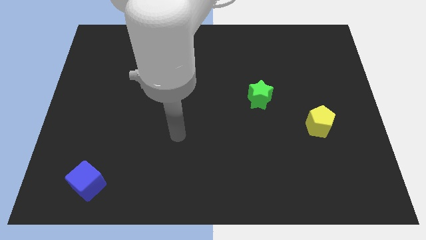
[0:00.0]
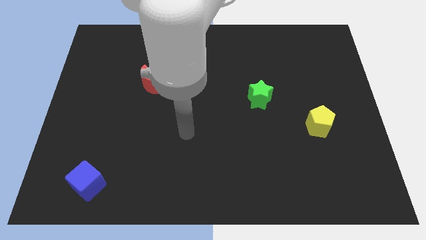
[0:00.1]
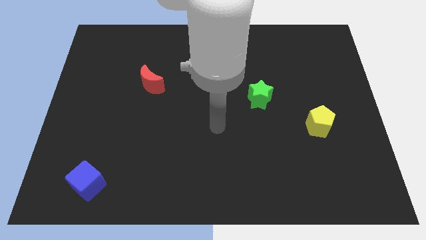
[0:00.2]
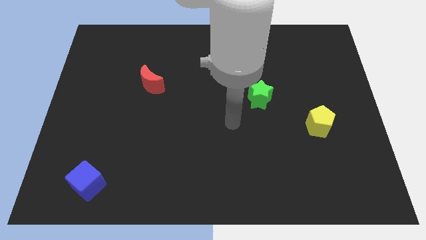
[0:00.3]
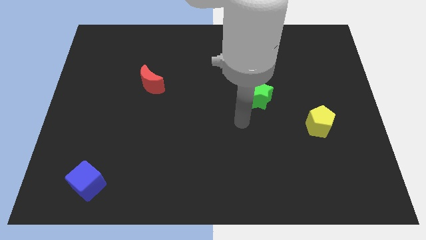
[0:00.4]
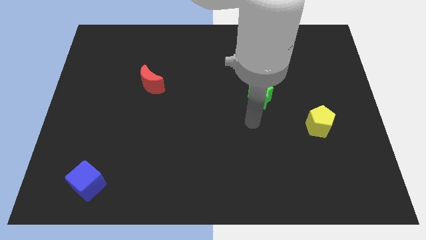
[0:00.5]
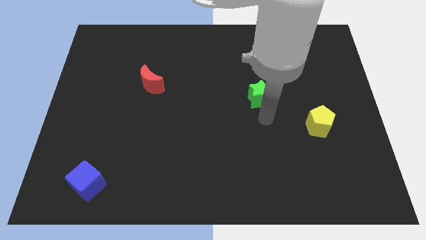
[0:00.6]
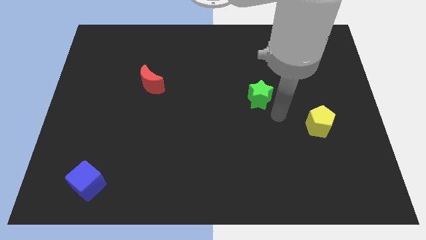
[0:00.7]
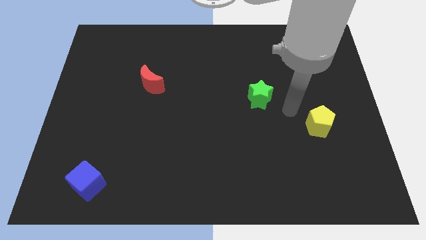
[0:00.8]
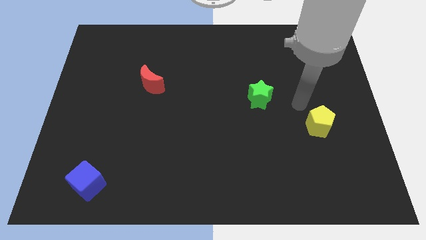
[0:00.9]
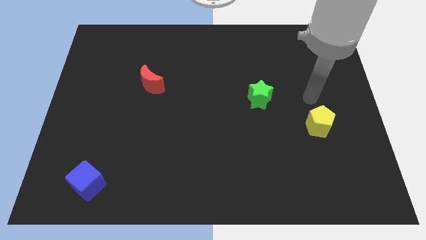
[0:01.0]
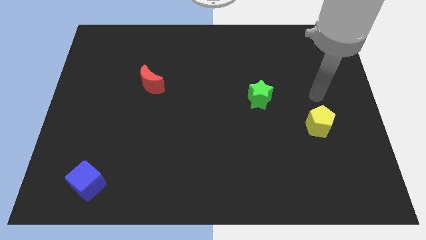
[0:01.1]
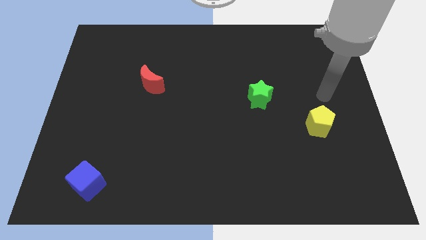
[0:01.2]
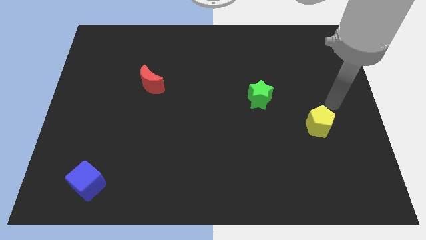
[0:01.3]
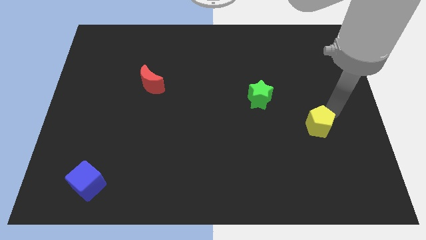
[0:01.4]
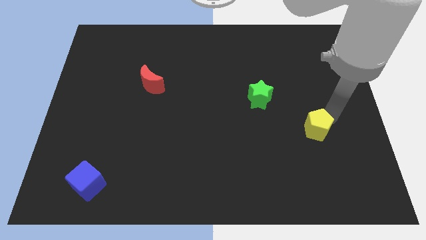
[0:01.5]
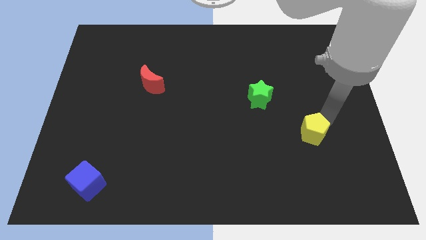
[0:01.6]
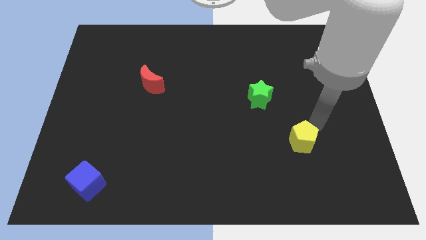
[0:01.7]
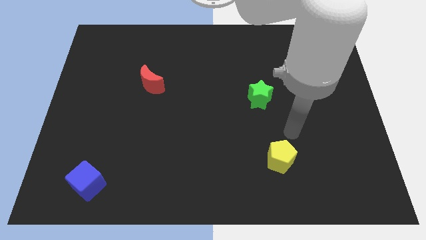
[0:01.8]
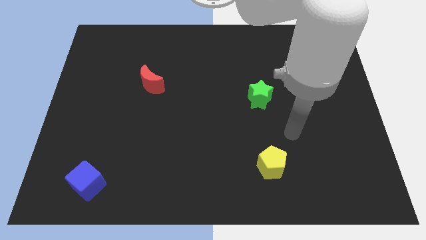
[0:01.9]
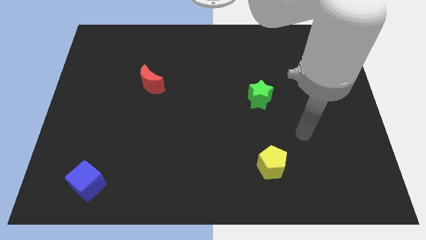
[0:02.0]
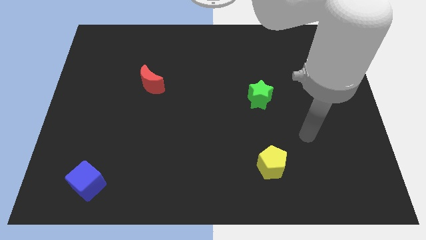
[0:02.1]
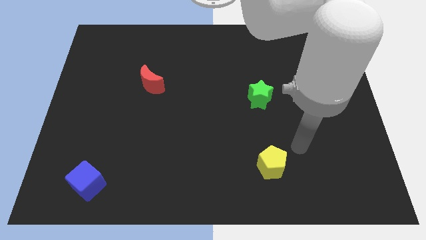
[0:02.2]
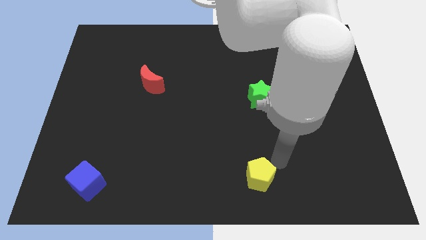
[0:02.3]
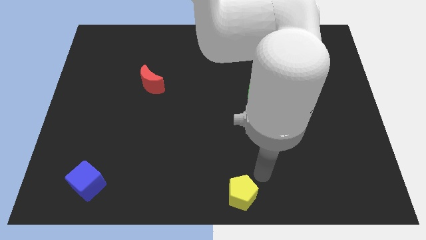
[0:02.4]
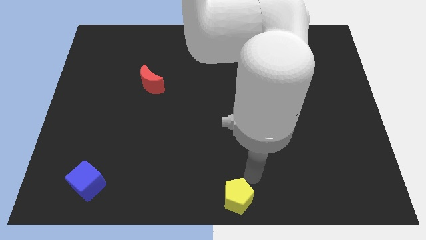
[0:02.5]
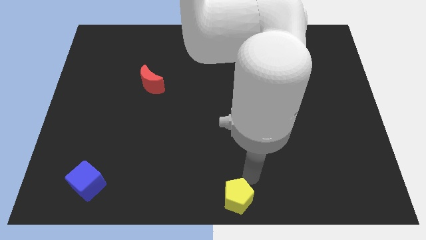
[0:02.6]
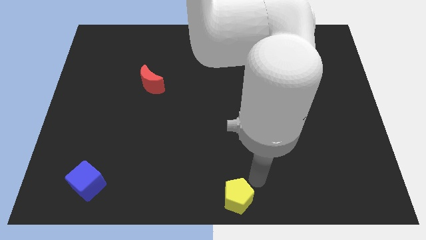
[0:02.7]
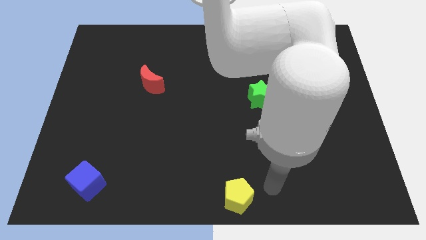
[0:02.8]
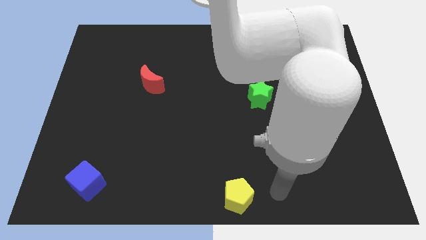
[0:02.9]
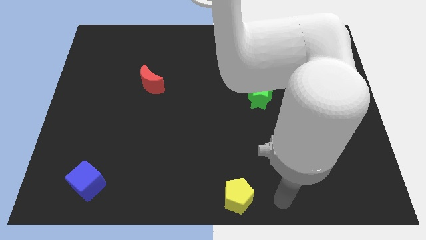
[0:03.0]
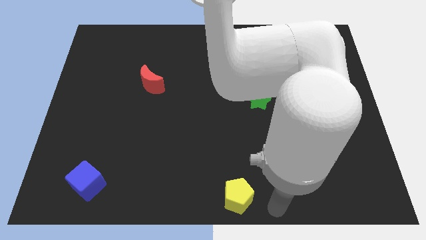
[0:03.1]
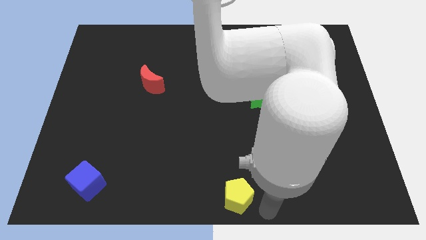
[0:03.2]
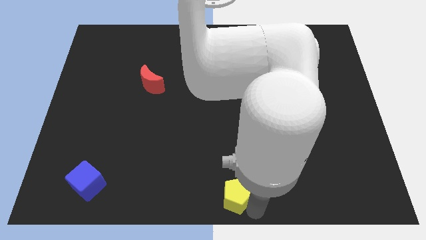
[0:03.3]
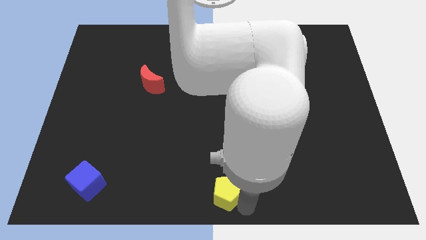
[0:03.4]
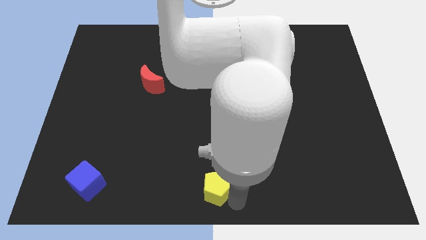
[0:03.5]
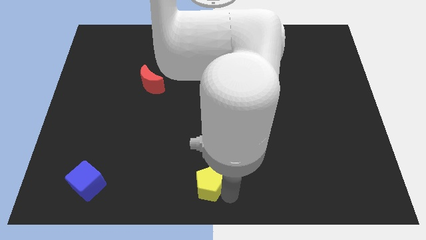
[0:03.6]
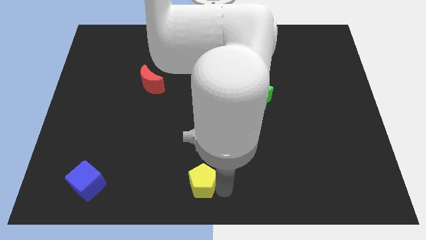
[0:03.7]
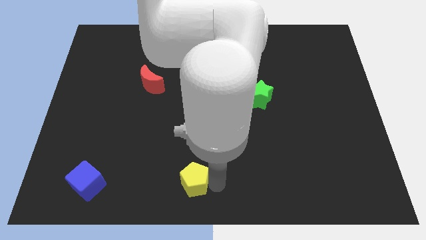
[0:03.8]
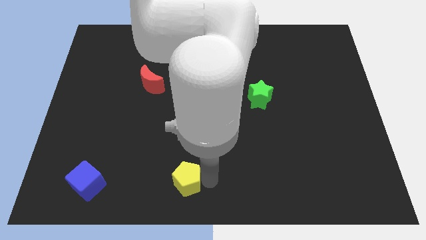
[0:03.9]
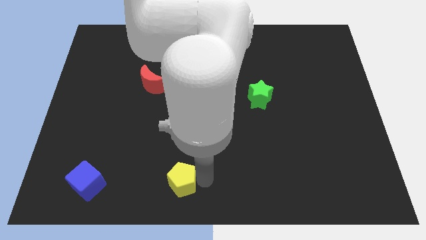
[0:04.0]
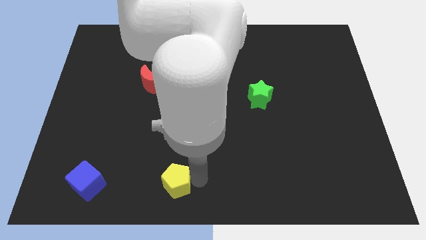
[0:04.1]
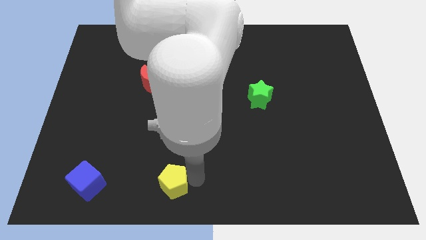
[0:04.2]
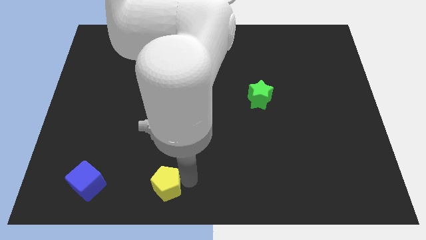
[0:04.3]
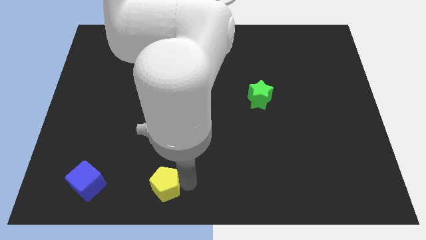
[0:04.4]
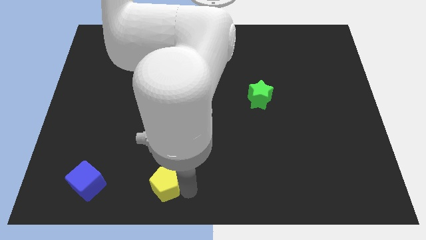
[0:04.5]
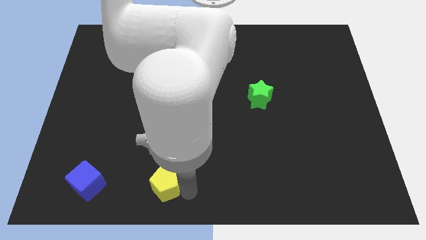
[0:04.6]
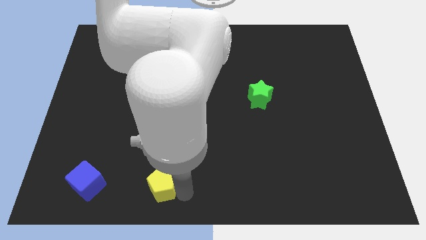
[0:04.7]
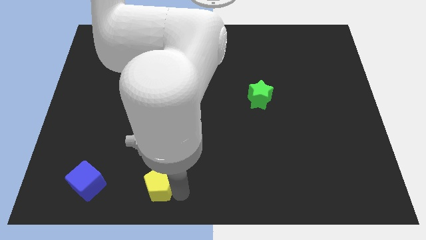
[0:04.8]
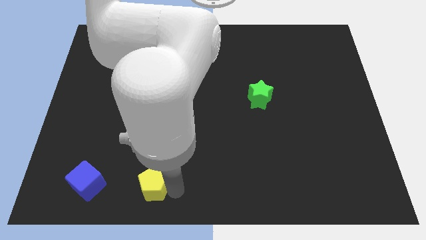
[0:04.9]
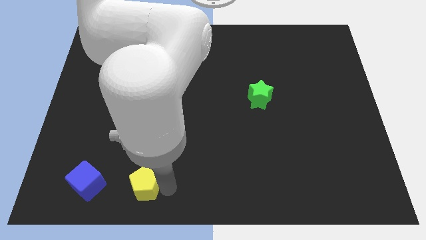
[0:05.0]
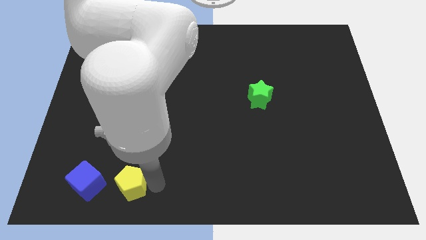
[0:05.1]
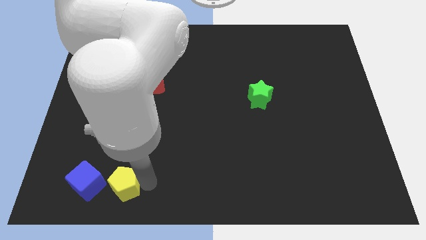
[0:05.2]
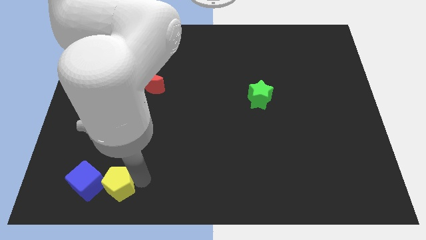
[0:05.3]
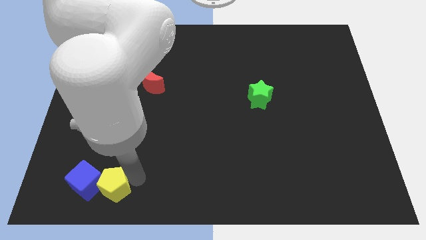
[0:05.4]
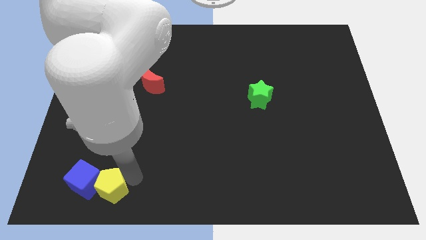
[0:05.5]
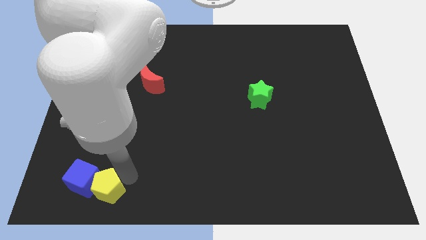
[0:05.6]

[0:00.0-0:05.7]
push the yellow pentagon to the blue cube

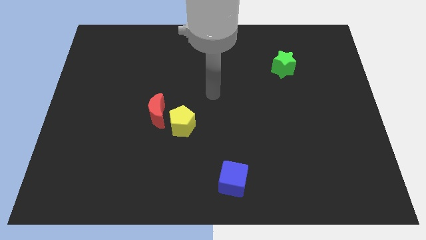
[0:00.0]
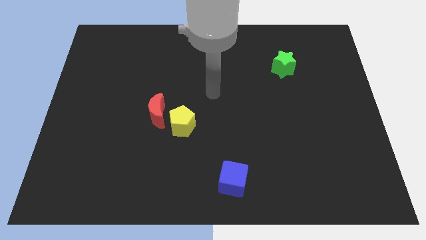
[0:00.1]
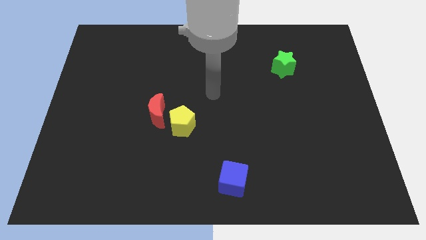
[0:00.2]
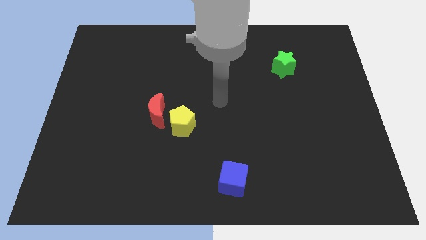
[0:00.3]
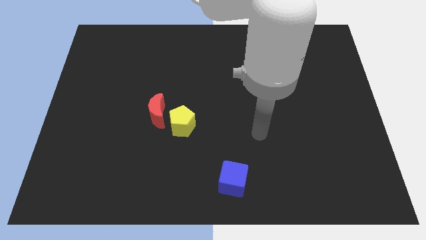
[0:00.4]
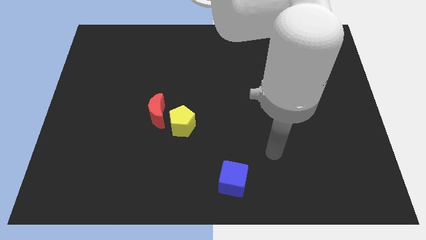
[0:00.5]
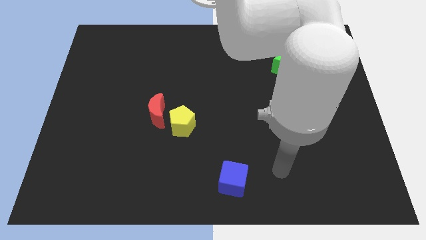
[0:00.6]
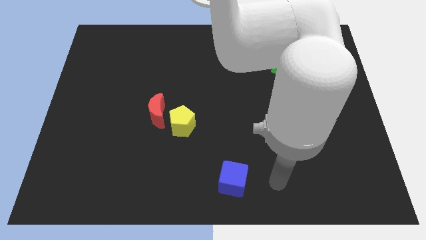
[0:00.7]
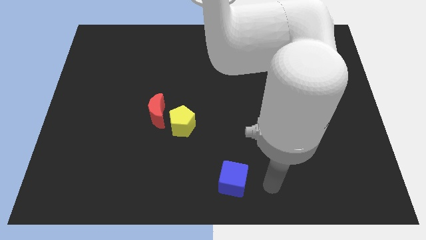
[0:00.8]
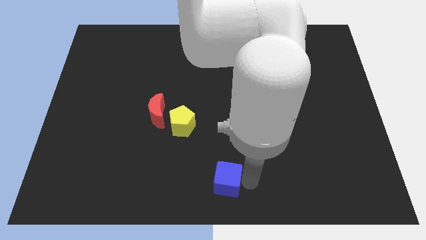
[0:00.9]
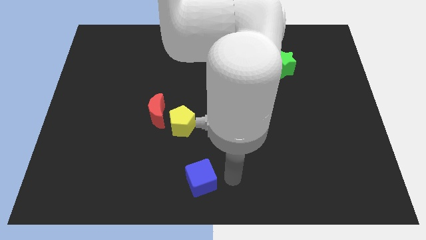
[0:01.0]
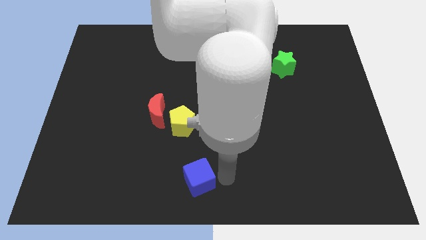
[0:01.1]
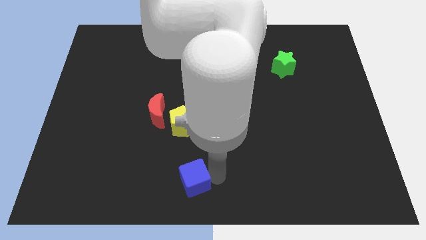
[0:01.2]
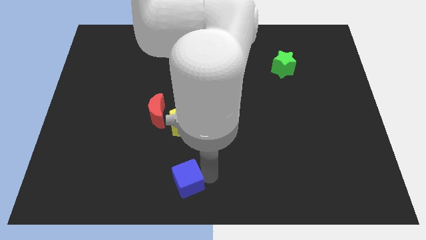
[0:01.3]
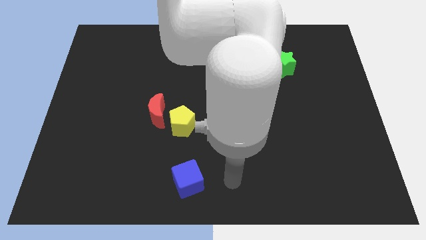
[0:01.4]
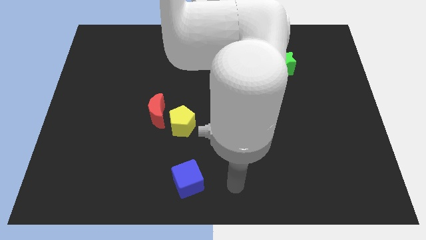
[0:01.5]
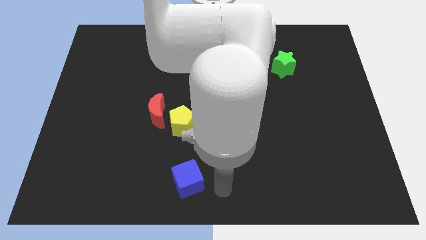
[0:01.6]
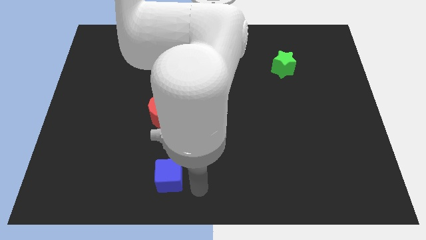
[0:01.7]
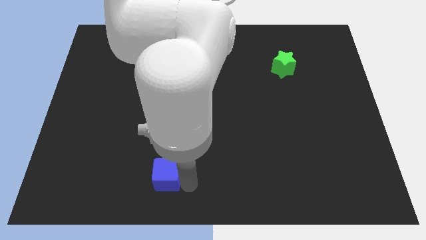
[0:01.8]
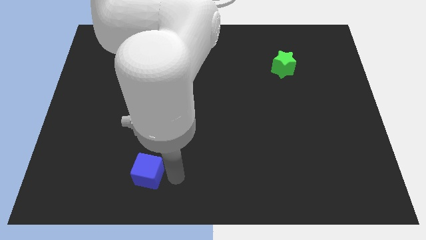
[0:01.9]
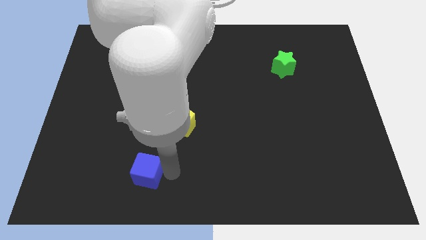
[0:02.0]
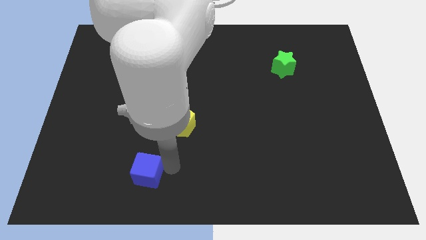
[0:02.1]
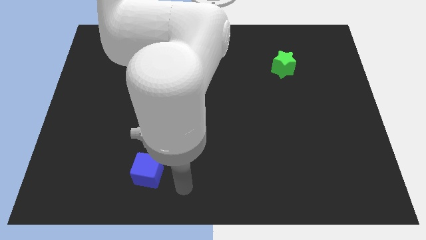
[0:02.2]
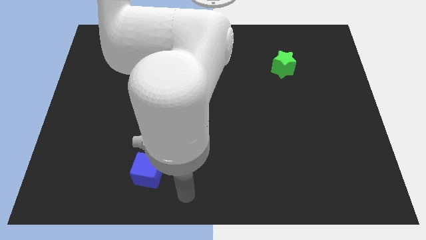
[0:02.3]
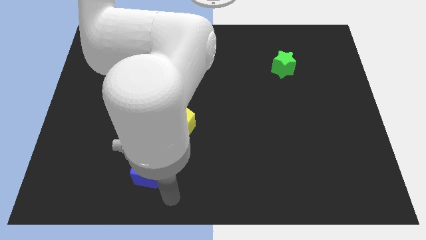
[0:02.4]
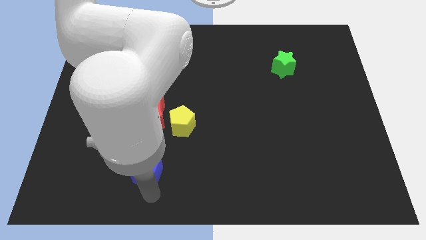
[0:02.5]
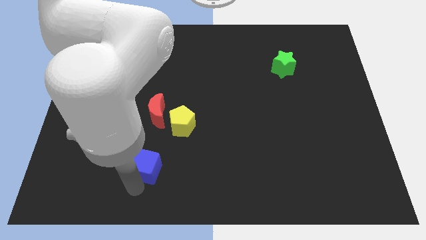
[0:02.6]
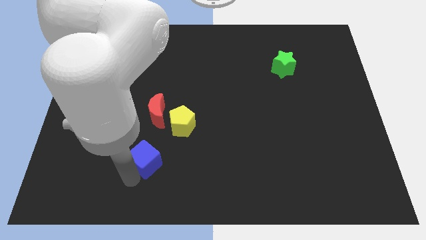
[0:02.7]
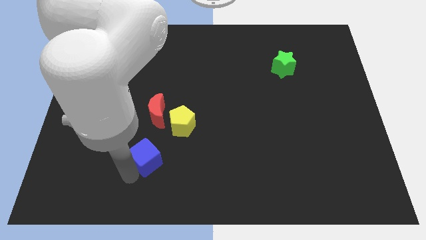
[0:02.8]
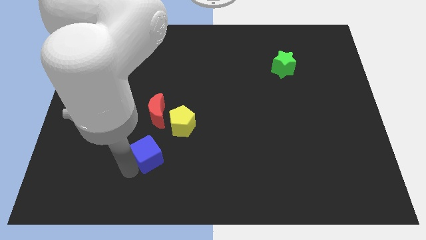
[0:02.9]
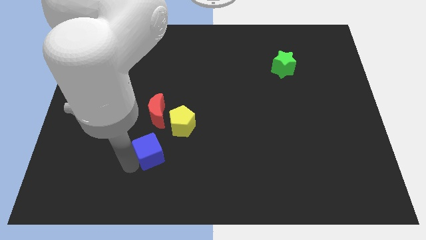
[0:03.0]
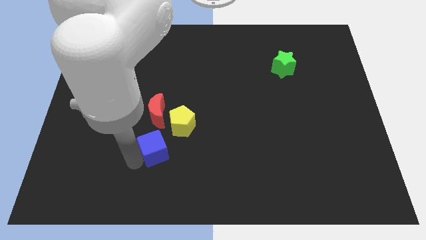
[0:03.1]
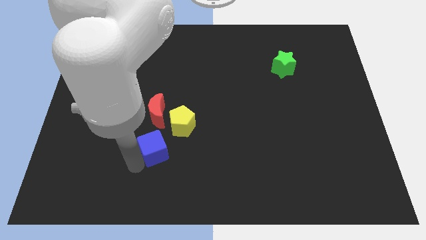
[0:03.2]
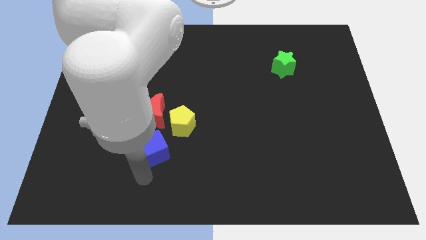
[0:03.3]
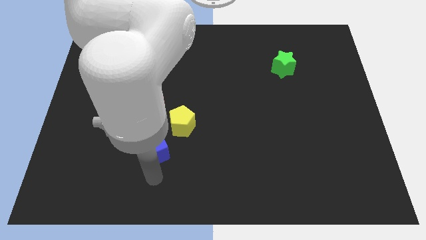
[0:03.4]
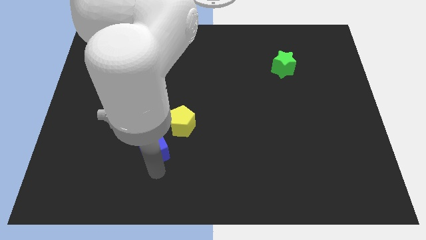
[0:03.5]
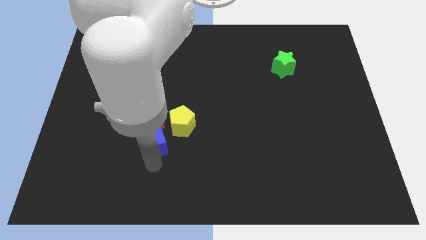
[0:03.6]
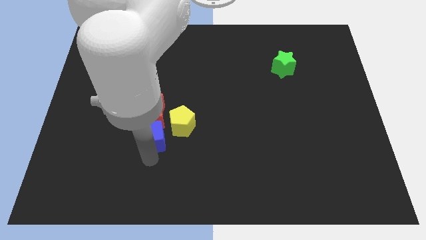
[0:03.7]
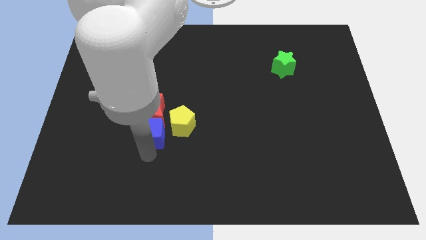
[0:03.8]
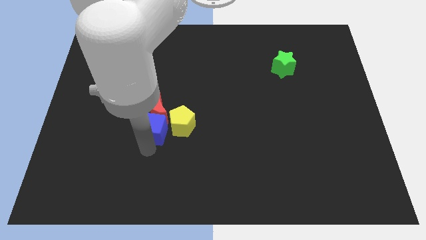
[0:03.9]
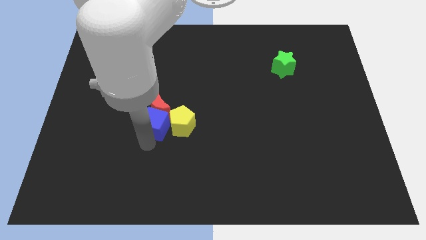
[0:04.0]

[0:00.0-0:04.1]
slide the blue cube close to the red moon
